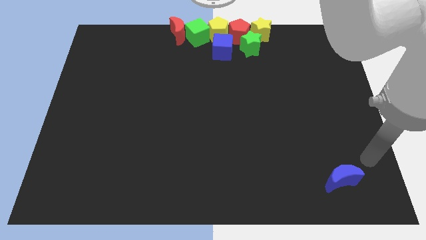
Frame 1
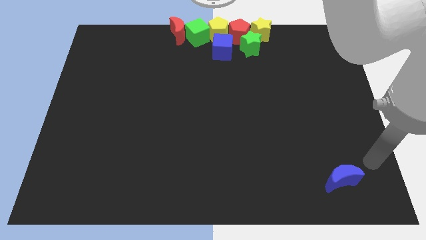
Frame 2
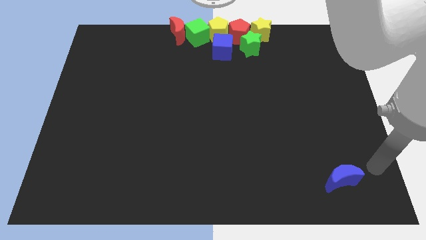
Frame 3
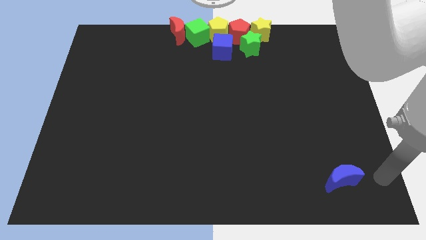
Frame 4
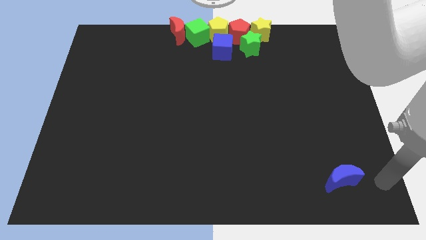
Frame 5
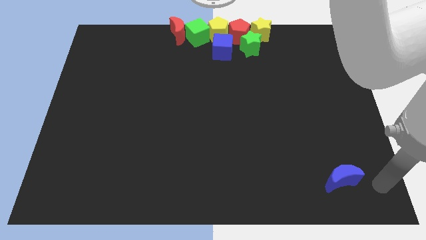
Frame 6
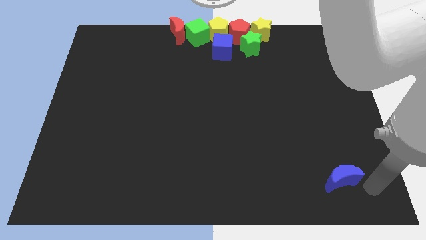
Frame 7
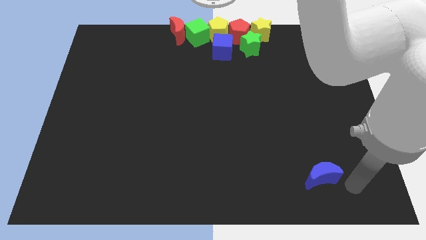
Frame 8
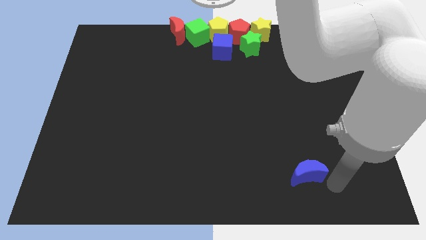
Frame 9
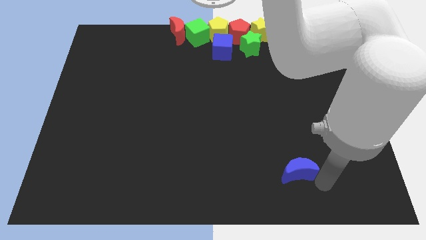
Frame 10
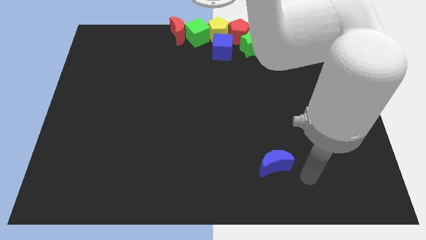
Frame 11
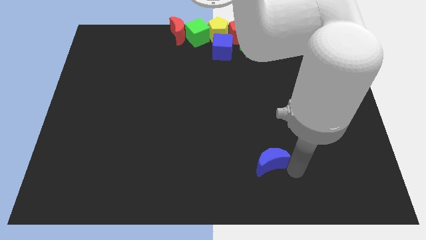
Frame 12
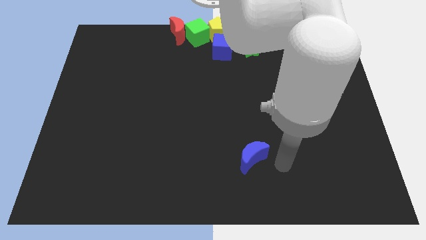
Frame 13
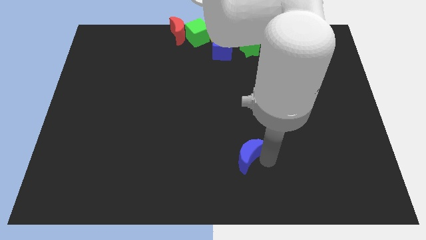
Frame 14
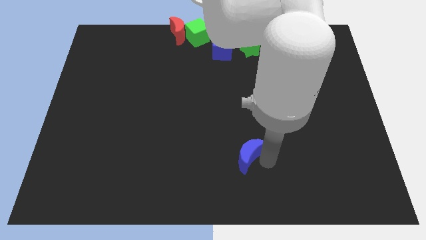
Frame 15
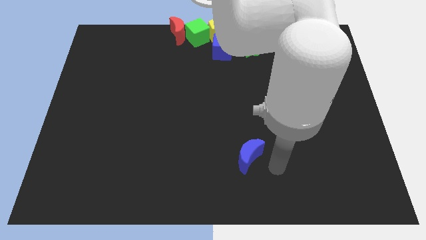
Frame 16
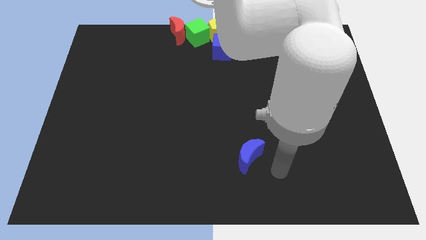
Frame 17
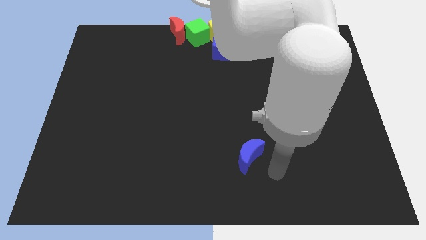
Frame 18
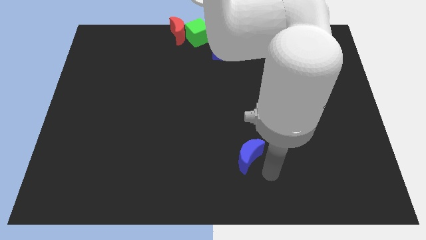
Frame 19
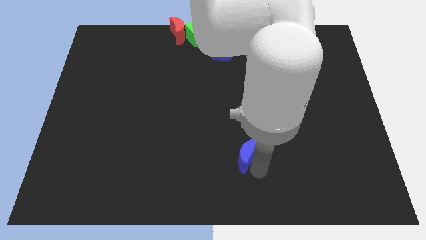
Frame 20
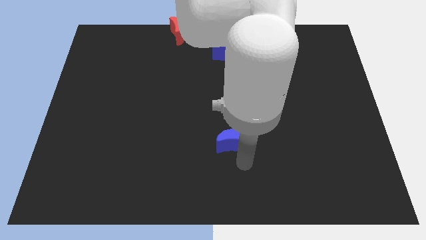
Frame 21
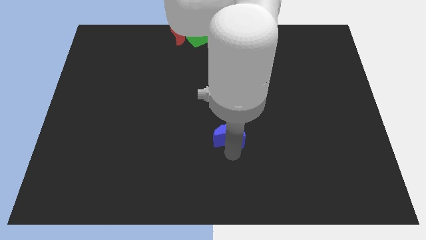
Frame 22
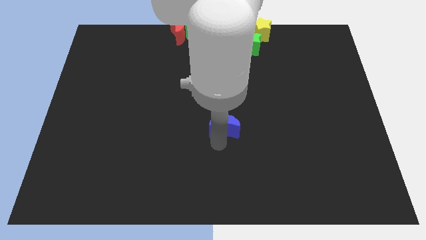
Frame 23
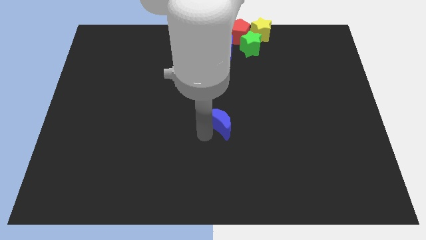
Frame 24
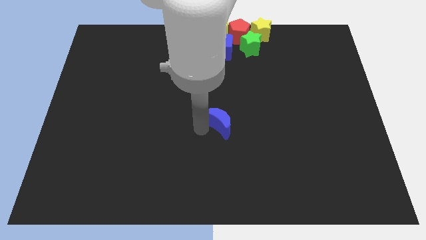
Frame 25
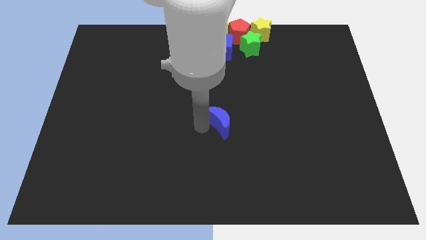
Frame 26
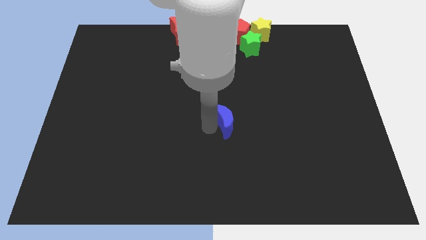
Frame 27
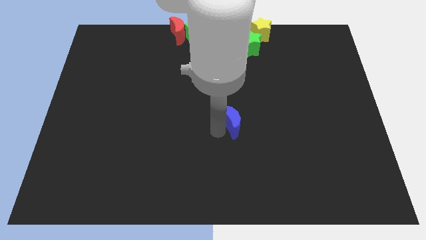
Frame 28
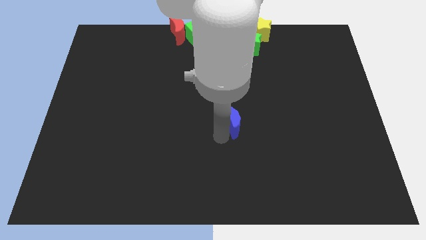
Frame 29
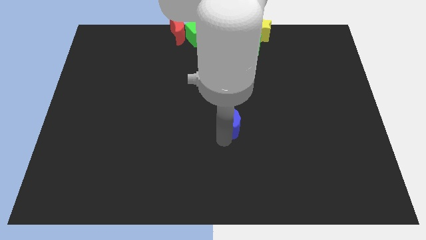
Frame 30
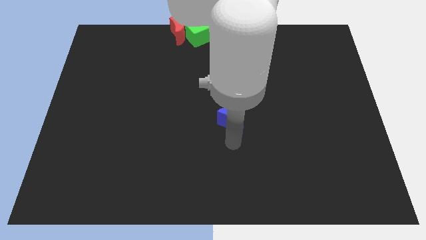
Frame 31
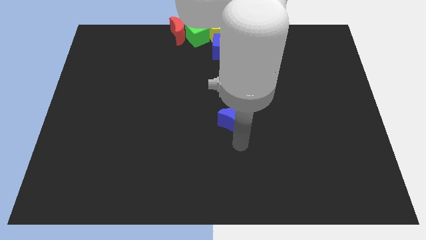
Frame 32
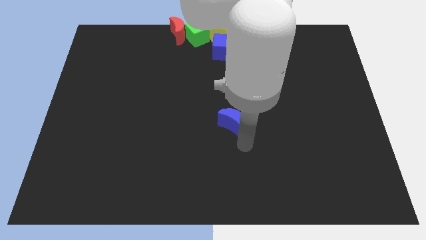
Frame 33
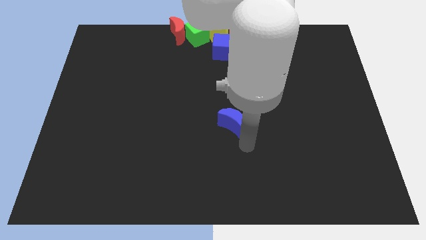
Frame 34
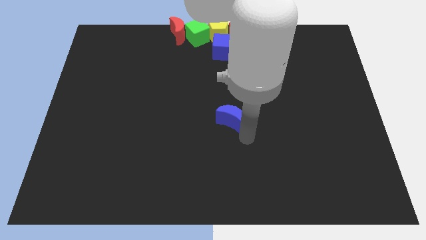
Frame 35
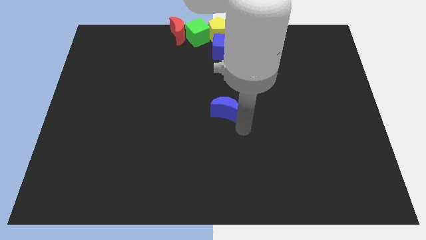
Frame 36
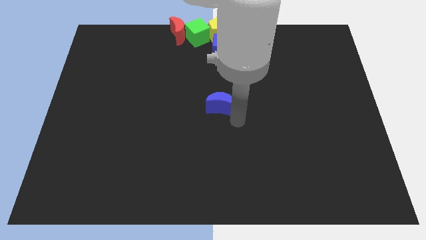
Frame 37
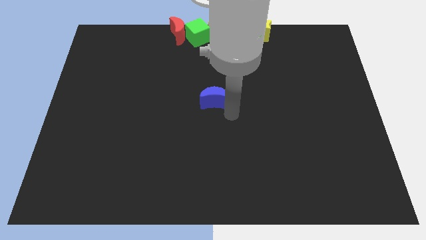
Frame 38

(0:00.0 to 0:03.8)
place the blue moon to the center of the board

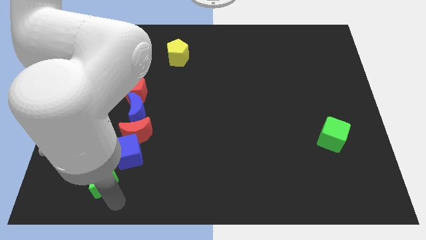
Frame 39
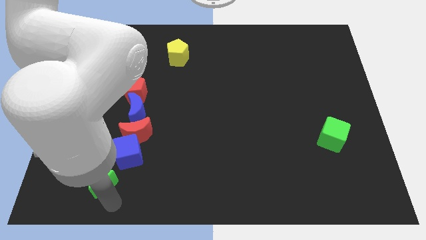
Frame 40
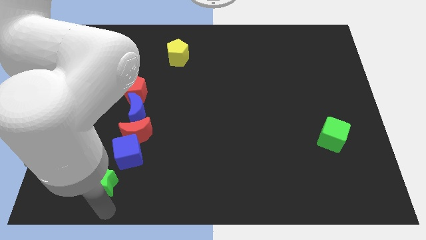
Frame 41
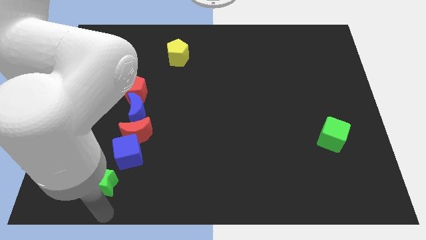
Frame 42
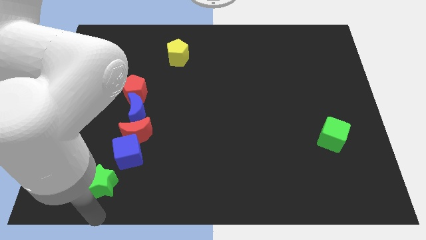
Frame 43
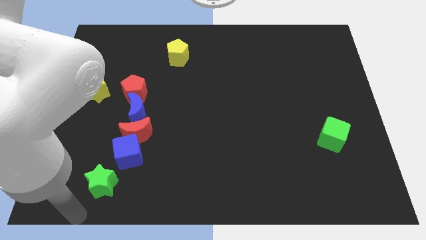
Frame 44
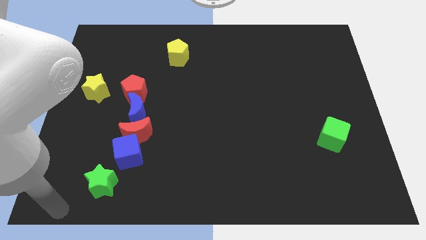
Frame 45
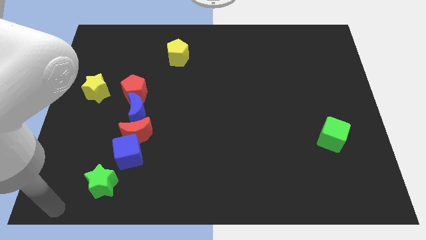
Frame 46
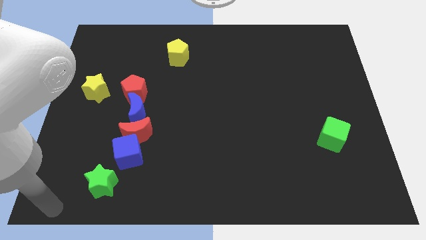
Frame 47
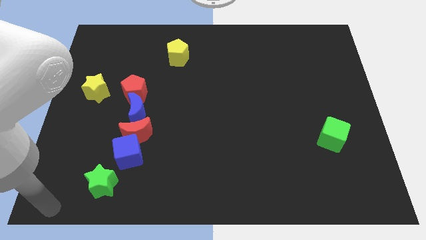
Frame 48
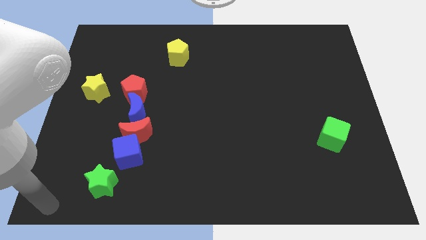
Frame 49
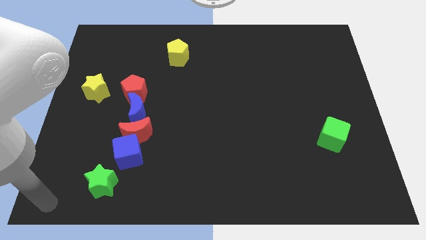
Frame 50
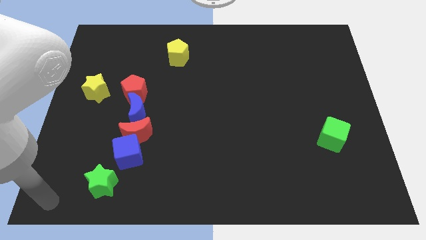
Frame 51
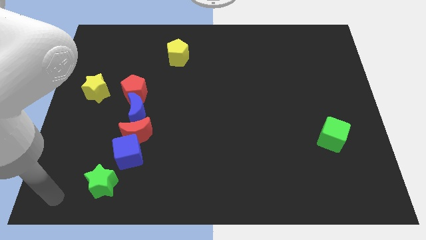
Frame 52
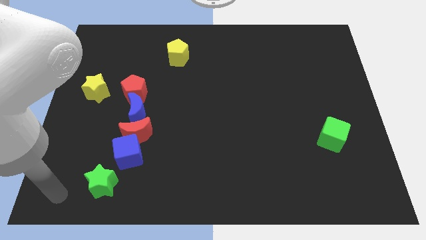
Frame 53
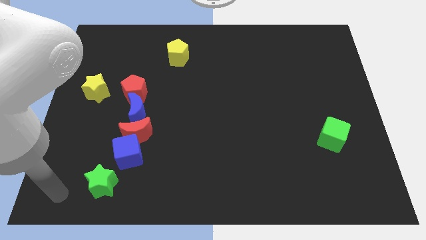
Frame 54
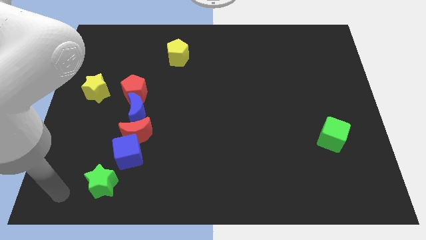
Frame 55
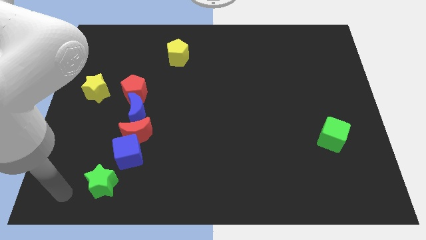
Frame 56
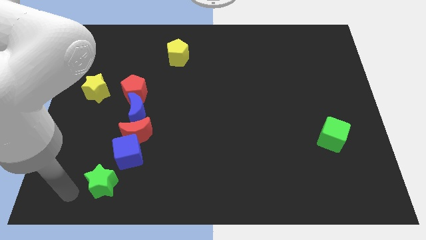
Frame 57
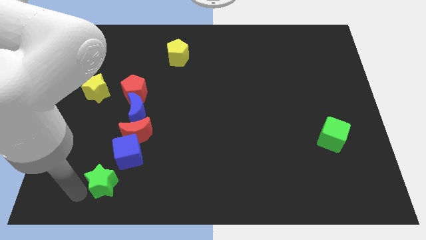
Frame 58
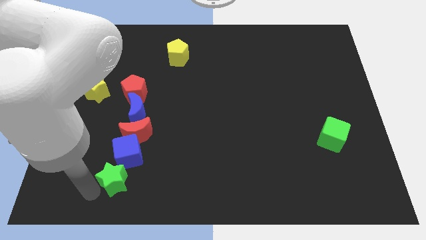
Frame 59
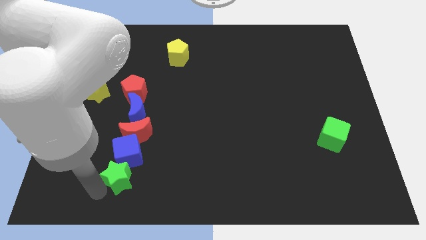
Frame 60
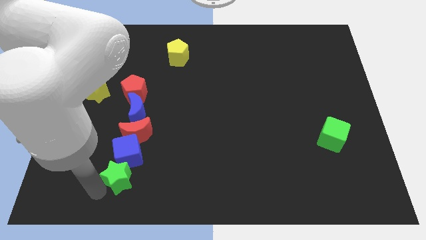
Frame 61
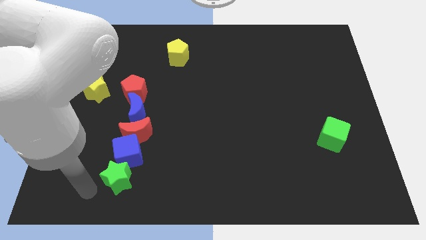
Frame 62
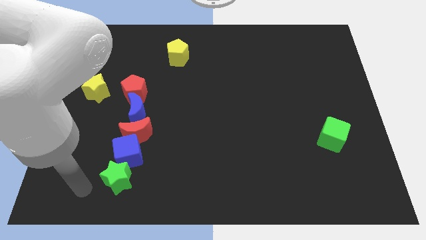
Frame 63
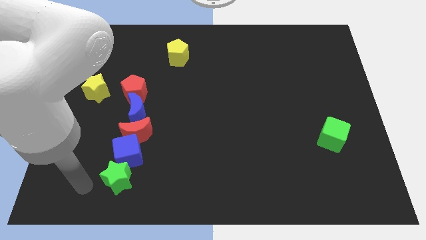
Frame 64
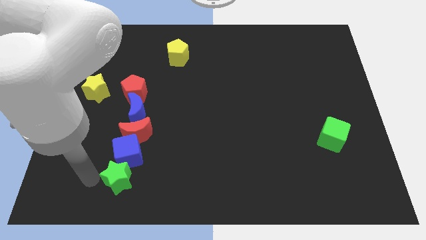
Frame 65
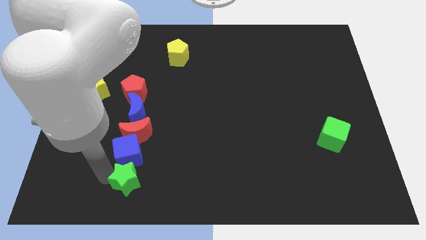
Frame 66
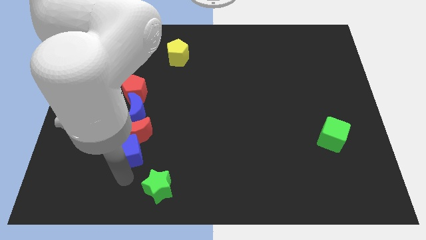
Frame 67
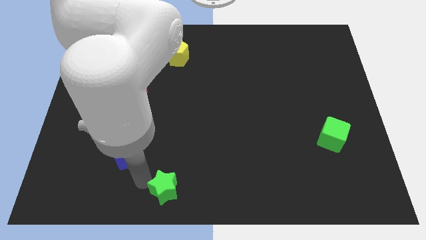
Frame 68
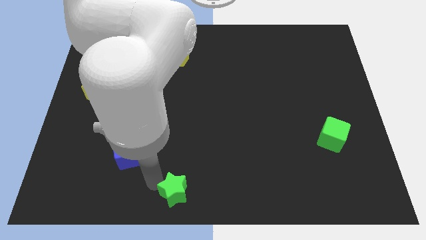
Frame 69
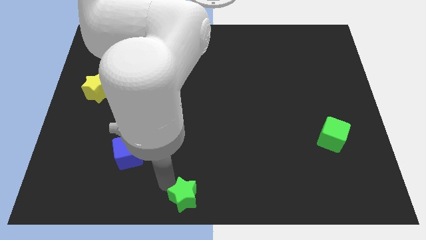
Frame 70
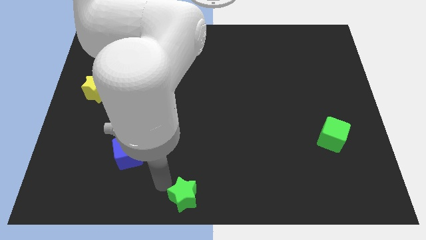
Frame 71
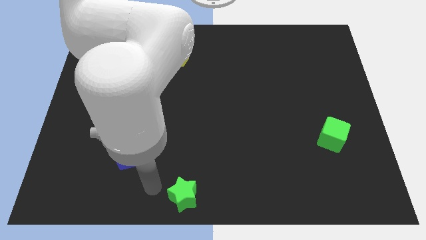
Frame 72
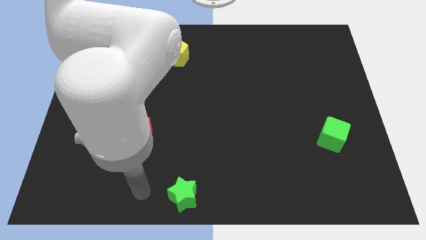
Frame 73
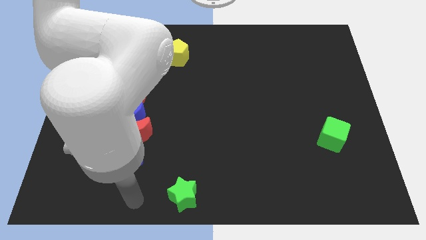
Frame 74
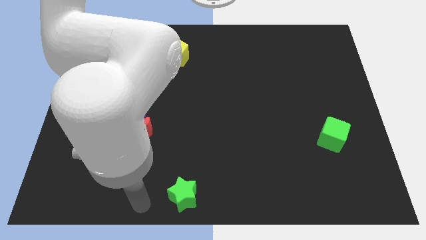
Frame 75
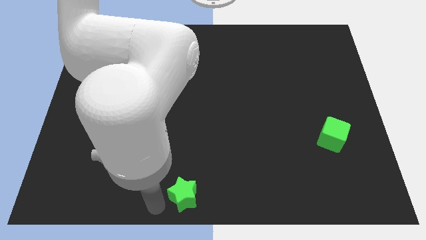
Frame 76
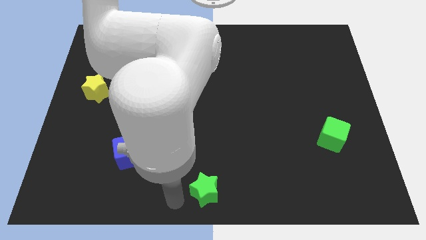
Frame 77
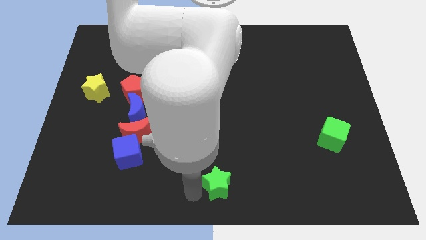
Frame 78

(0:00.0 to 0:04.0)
place the green star at bottom center of the board

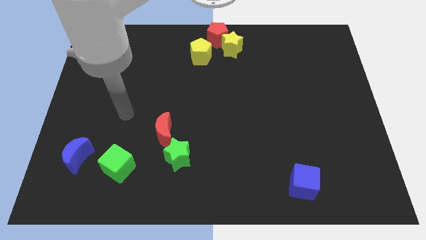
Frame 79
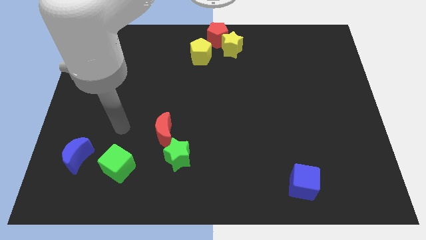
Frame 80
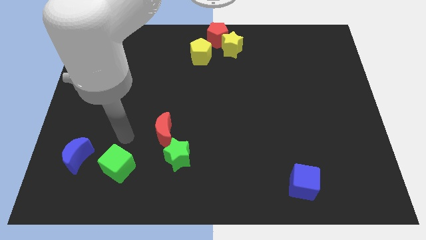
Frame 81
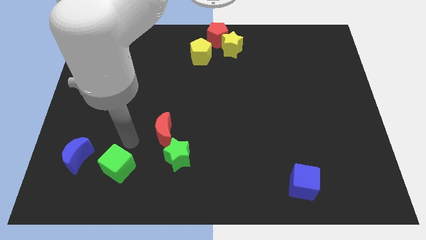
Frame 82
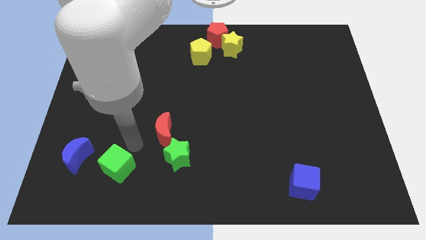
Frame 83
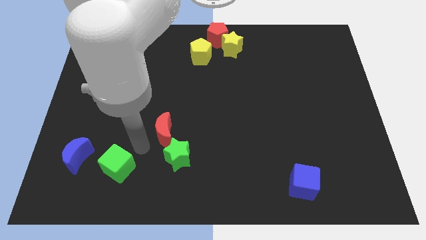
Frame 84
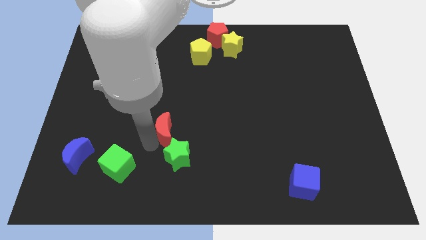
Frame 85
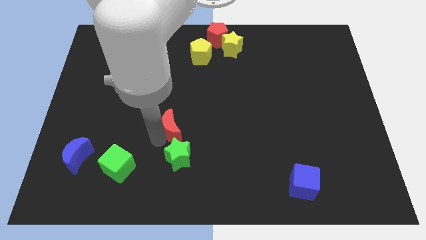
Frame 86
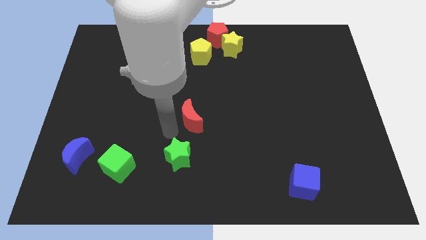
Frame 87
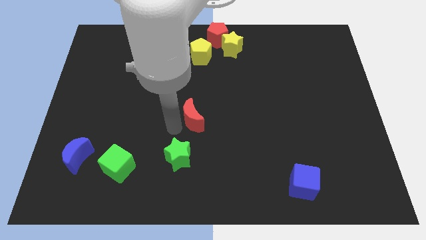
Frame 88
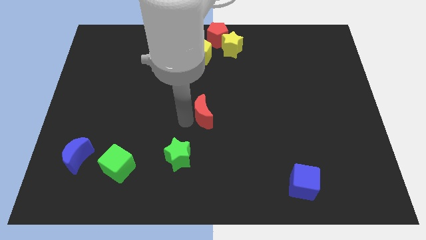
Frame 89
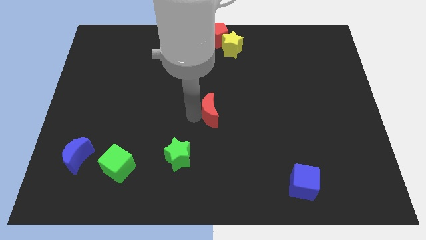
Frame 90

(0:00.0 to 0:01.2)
separate red moon from green star

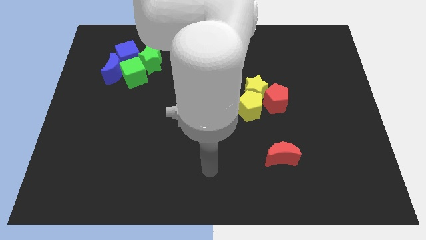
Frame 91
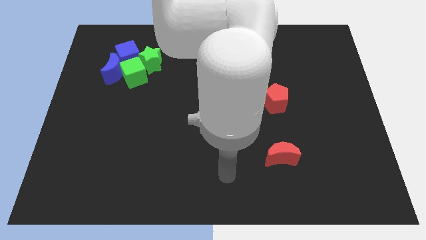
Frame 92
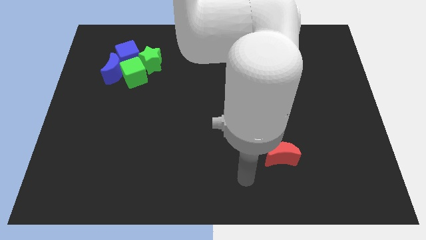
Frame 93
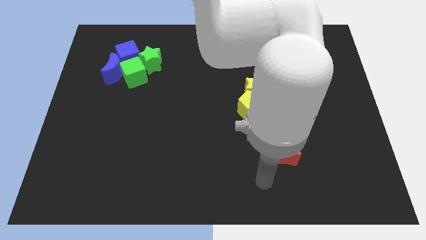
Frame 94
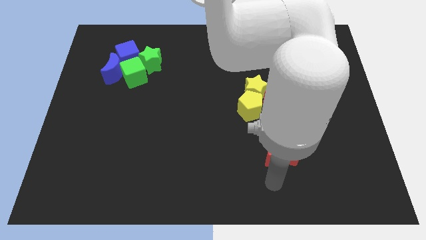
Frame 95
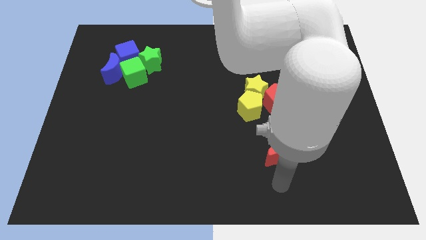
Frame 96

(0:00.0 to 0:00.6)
move the arm below the red moon
